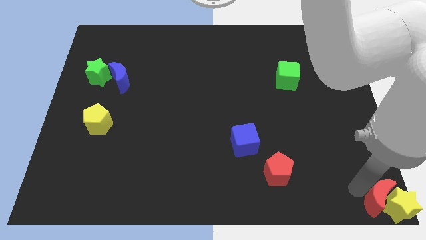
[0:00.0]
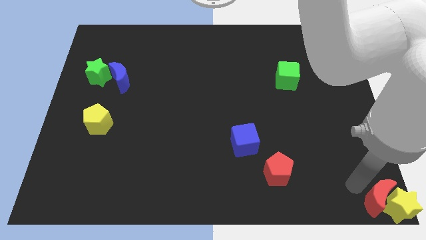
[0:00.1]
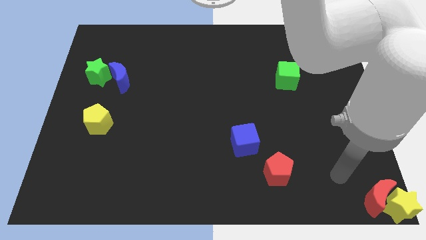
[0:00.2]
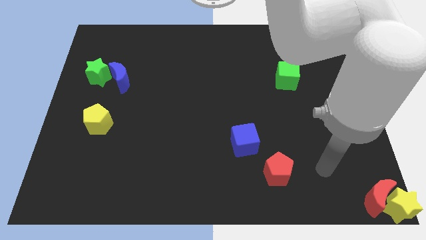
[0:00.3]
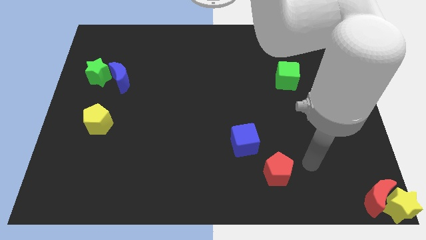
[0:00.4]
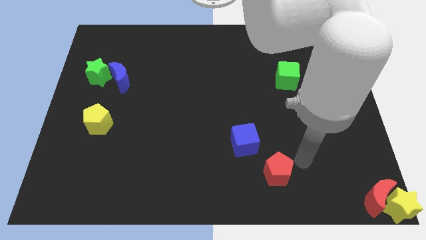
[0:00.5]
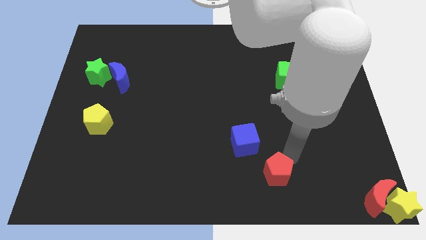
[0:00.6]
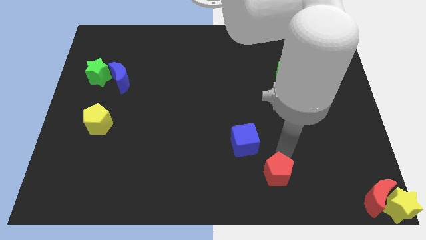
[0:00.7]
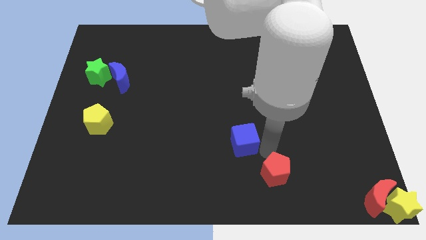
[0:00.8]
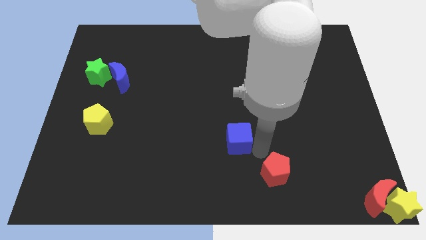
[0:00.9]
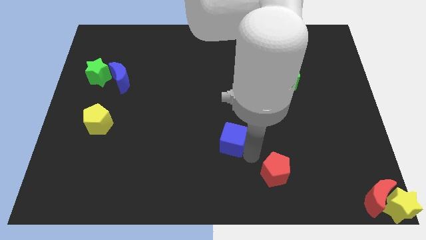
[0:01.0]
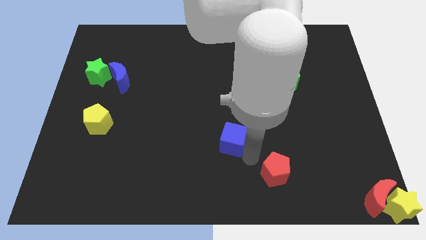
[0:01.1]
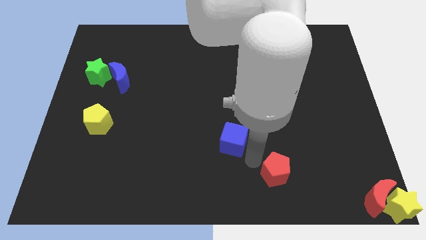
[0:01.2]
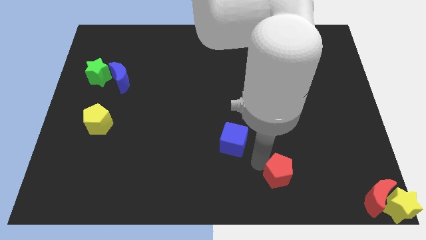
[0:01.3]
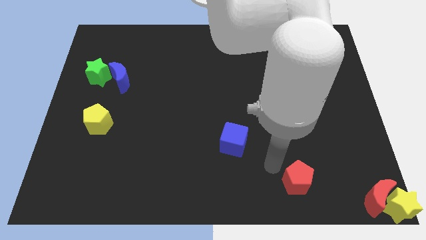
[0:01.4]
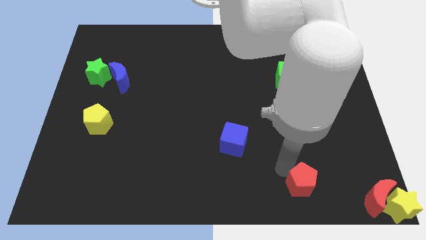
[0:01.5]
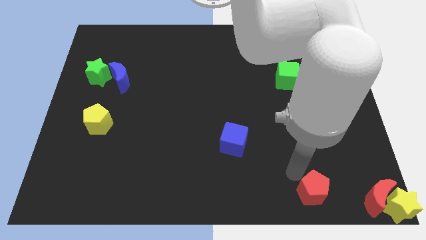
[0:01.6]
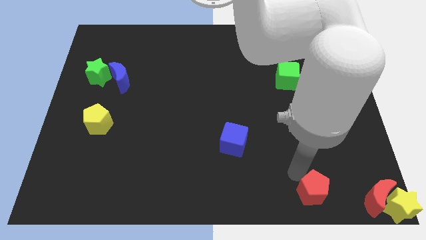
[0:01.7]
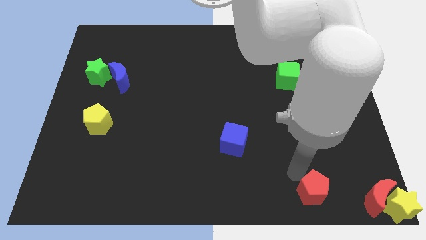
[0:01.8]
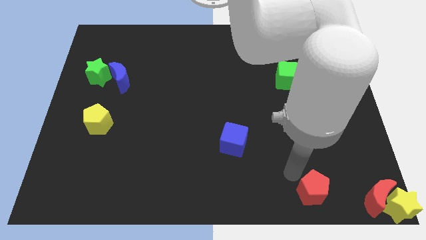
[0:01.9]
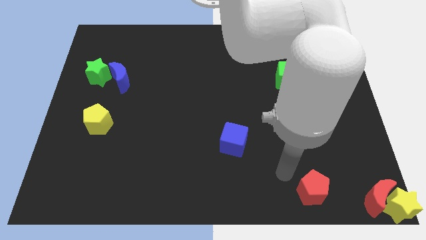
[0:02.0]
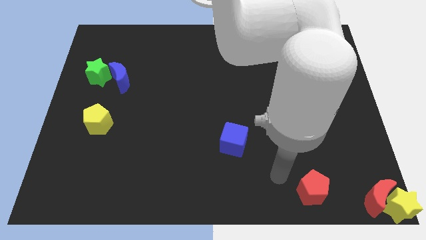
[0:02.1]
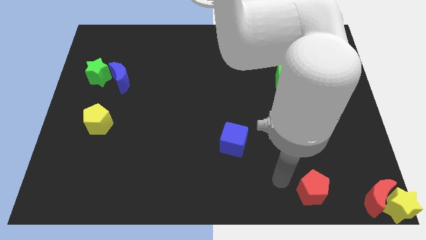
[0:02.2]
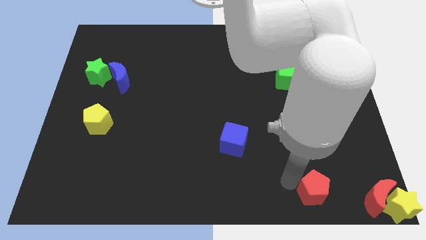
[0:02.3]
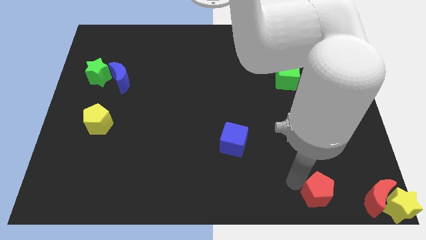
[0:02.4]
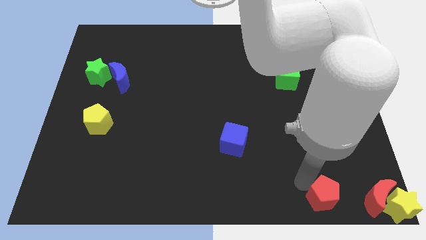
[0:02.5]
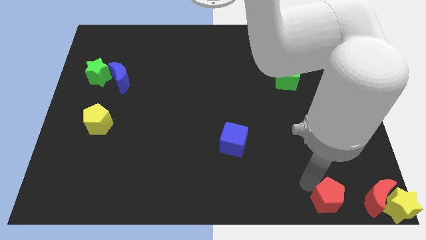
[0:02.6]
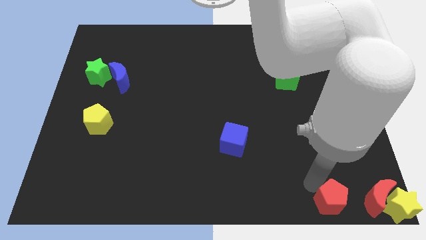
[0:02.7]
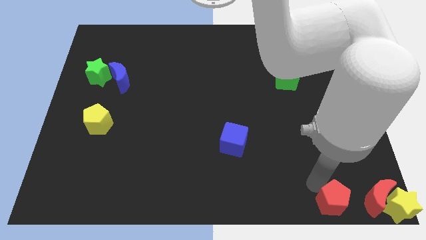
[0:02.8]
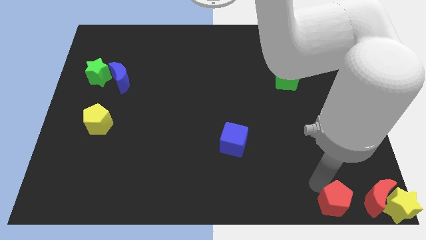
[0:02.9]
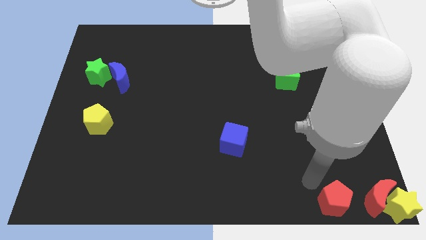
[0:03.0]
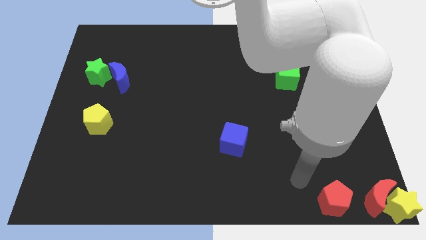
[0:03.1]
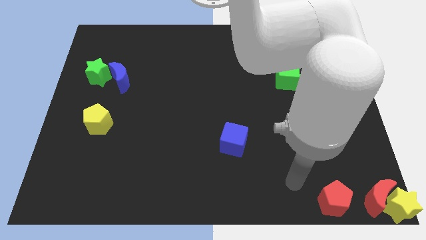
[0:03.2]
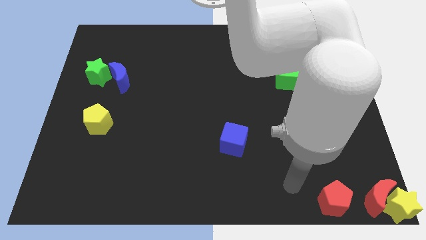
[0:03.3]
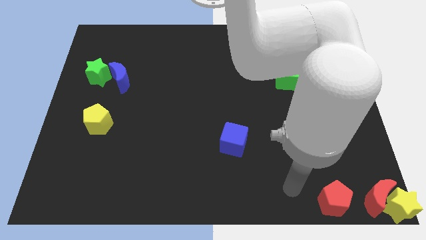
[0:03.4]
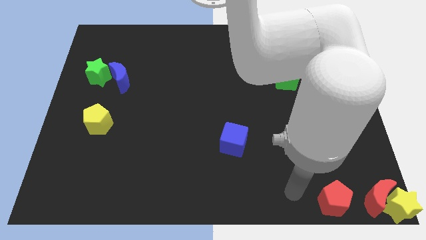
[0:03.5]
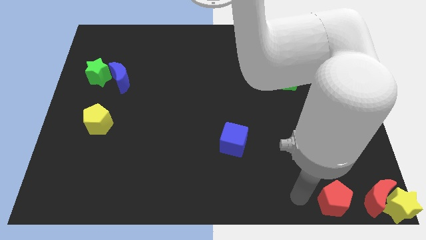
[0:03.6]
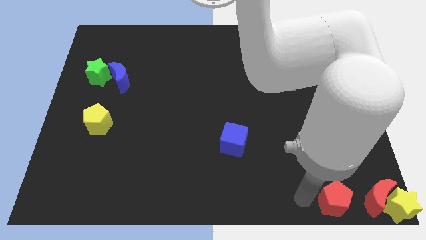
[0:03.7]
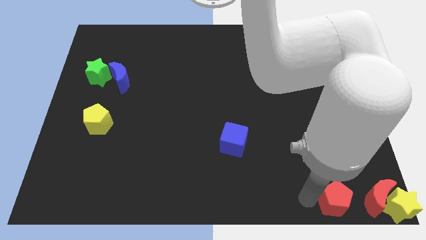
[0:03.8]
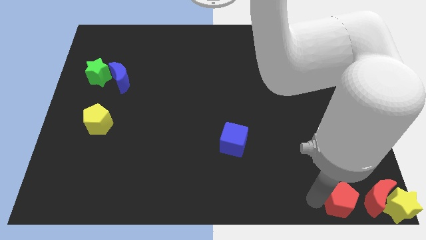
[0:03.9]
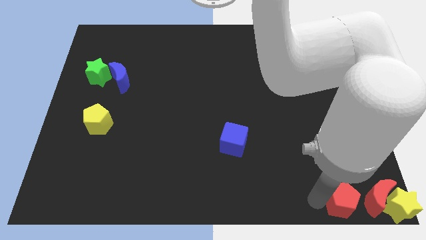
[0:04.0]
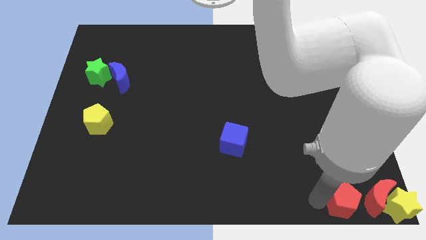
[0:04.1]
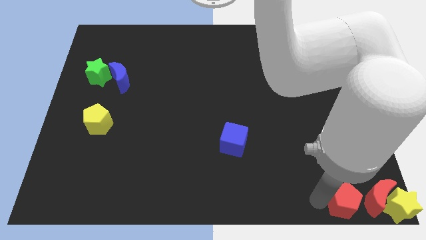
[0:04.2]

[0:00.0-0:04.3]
separate red pentagon from the blue cube

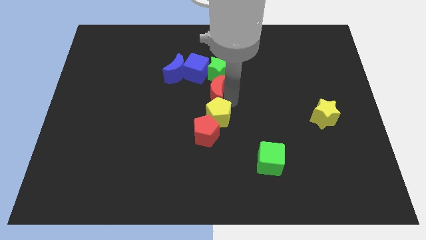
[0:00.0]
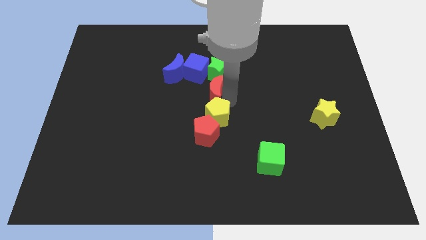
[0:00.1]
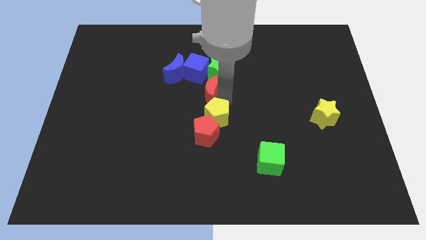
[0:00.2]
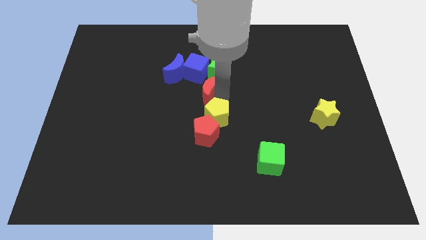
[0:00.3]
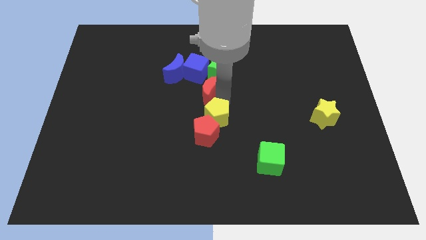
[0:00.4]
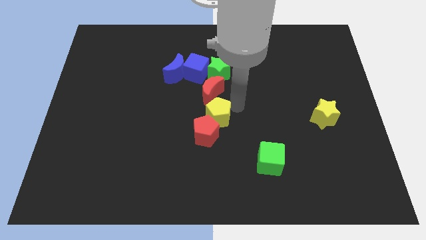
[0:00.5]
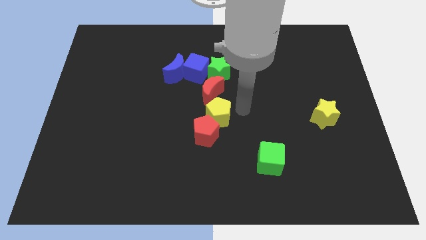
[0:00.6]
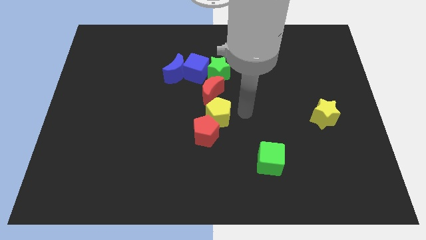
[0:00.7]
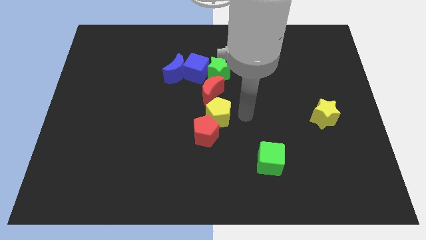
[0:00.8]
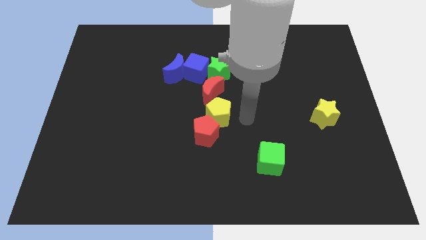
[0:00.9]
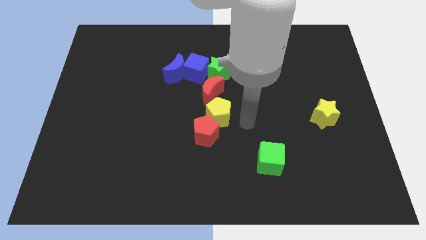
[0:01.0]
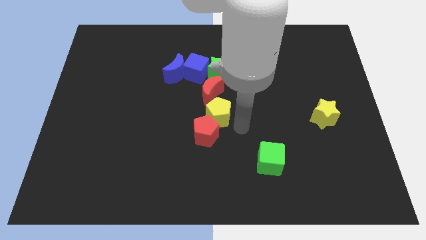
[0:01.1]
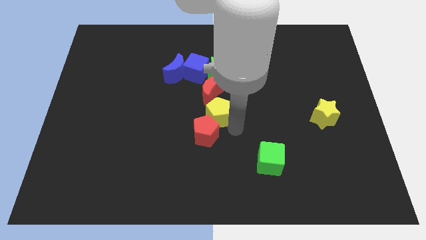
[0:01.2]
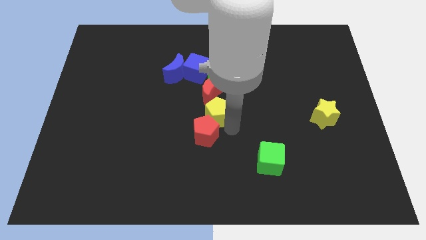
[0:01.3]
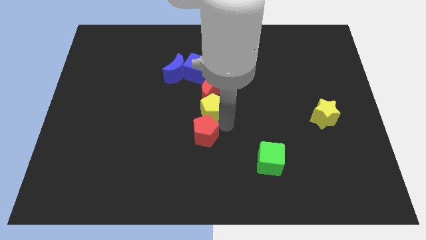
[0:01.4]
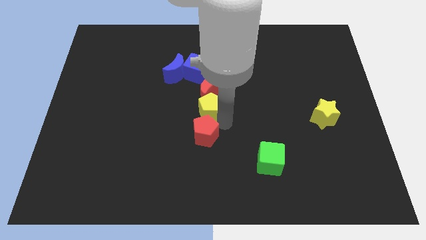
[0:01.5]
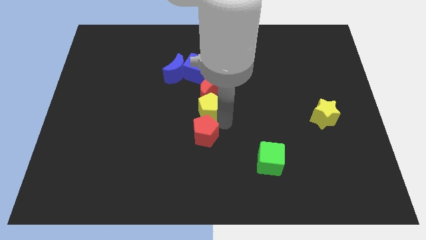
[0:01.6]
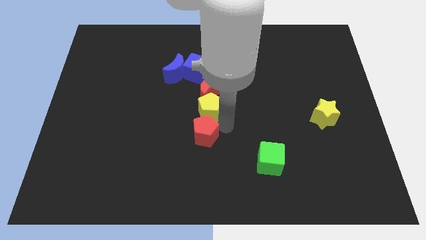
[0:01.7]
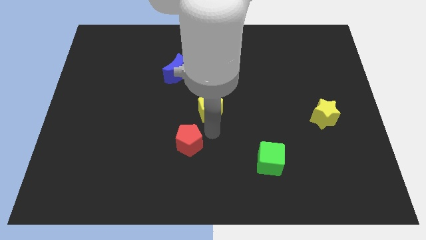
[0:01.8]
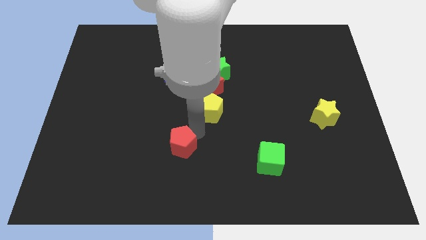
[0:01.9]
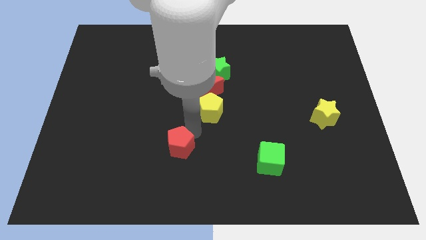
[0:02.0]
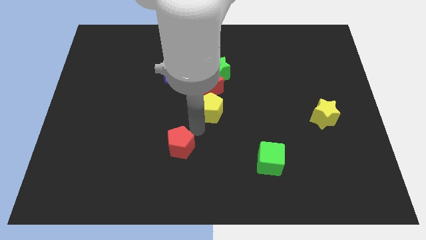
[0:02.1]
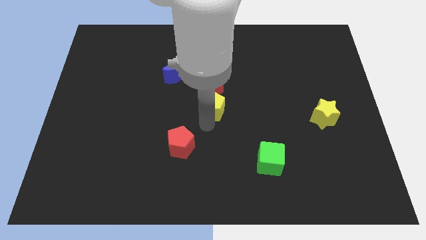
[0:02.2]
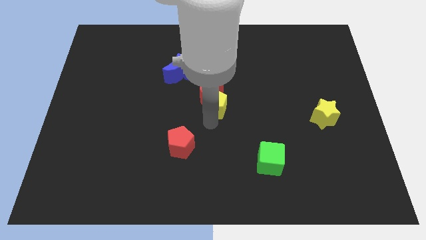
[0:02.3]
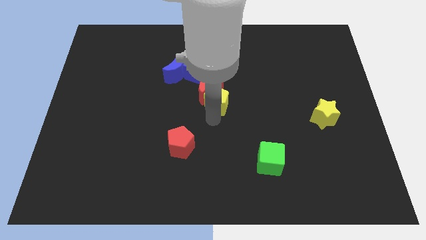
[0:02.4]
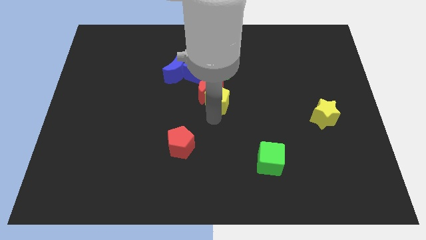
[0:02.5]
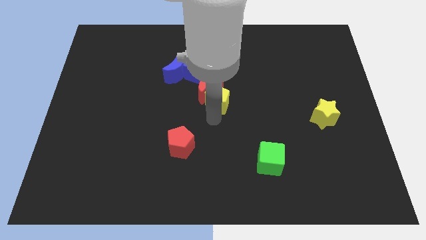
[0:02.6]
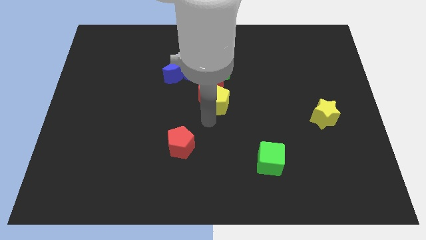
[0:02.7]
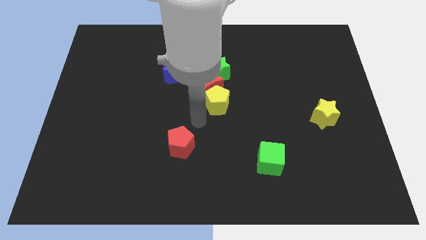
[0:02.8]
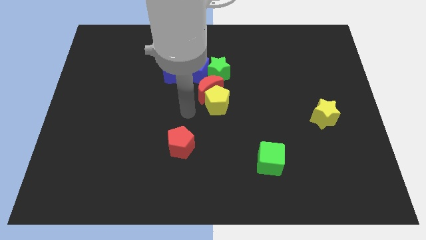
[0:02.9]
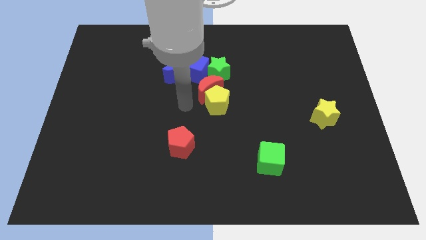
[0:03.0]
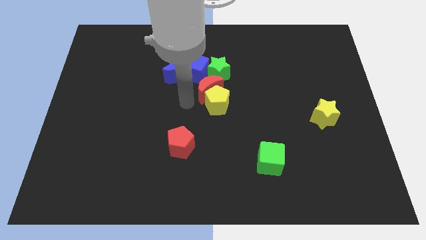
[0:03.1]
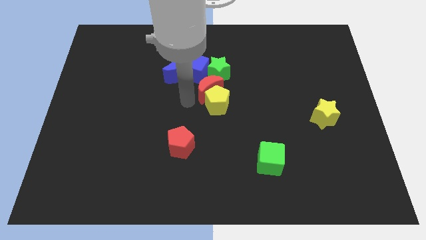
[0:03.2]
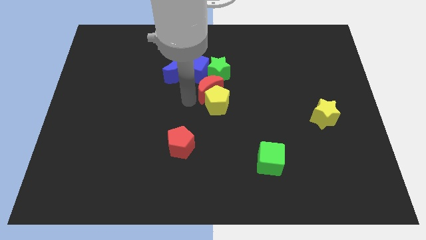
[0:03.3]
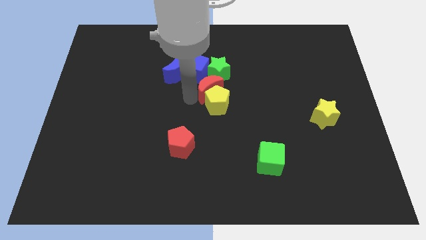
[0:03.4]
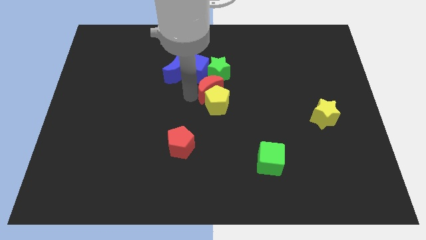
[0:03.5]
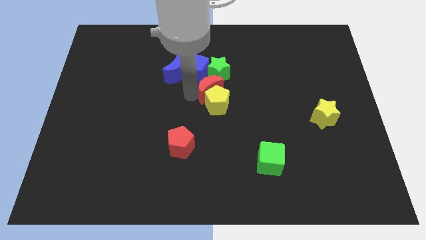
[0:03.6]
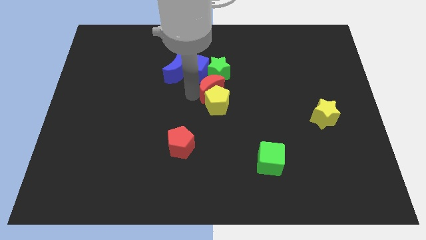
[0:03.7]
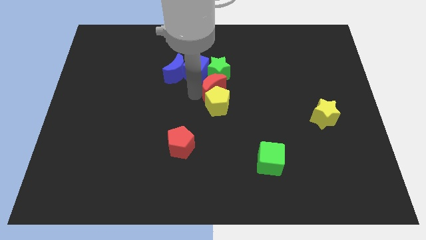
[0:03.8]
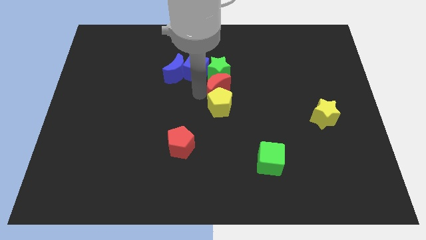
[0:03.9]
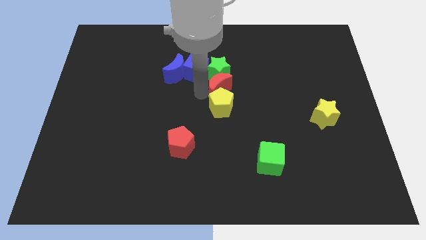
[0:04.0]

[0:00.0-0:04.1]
arrange green star red moon and yellow pentagon in a vertical line

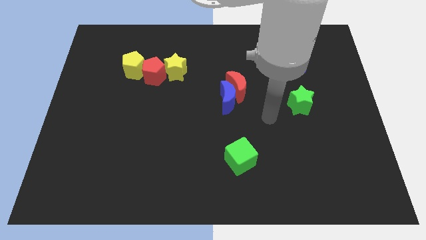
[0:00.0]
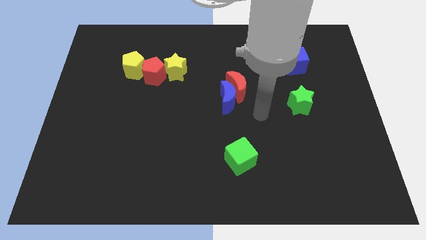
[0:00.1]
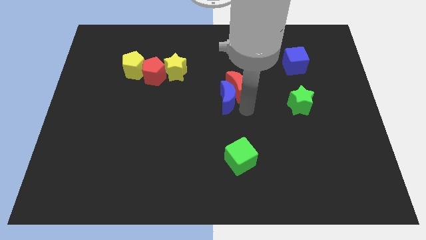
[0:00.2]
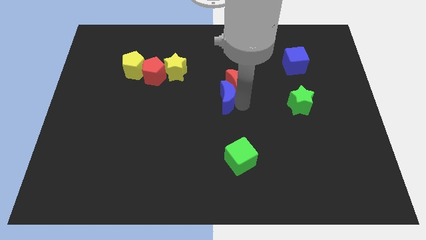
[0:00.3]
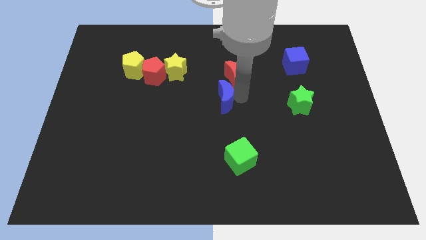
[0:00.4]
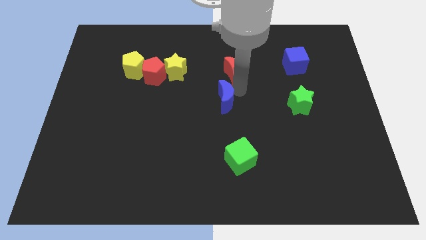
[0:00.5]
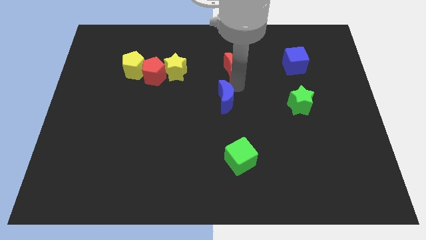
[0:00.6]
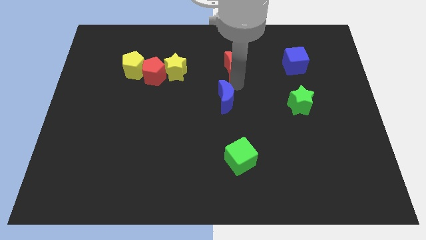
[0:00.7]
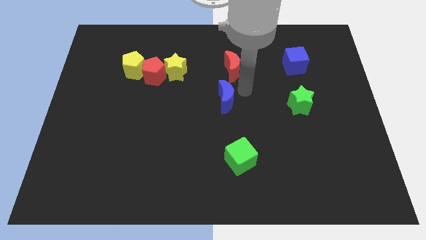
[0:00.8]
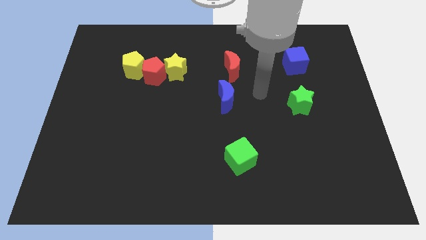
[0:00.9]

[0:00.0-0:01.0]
push red crescent slightly towards up
